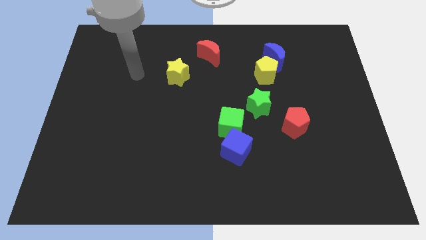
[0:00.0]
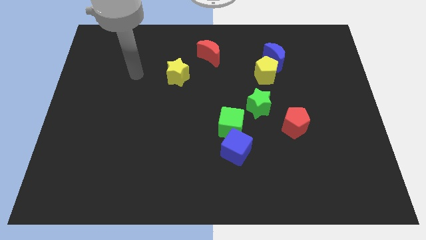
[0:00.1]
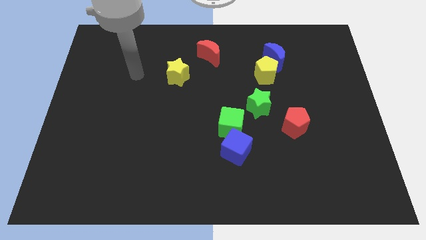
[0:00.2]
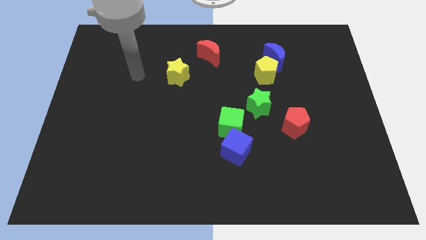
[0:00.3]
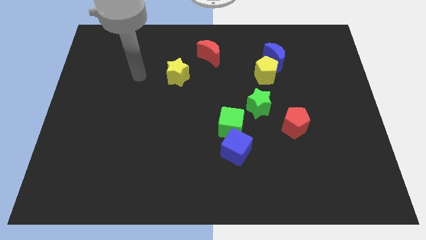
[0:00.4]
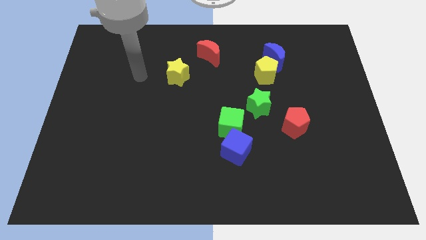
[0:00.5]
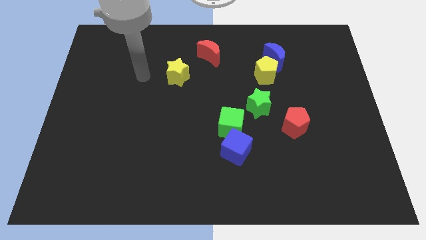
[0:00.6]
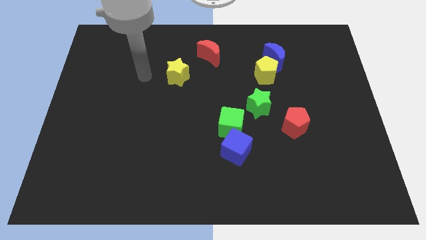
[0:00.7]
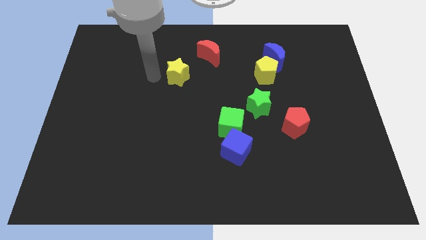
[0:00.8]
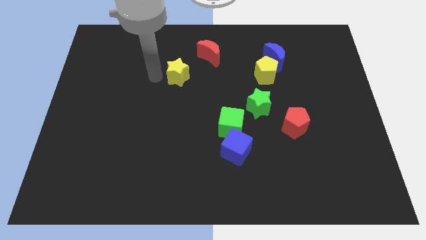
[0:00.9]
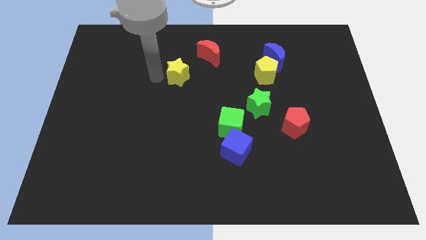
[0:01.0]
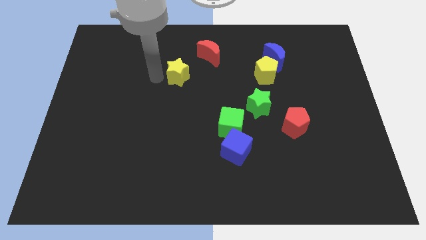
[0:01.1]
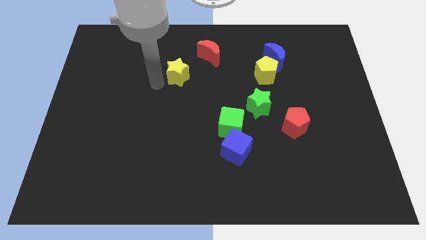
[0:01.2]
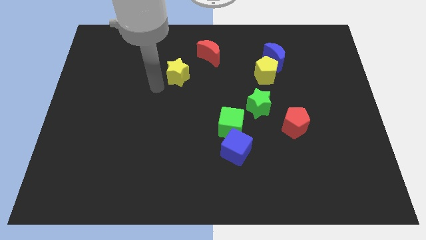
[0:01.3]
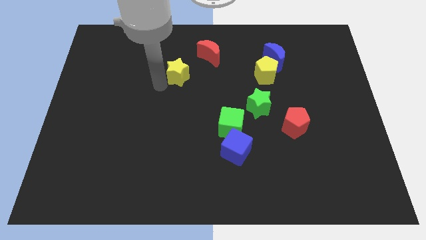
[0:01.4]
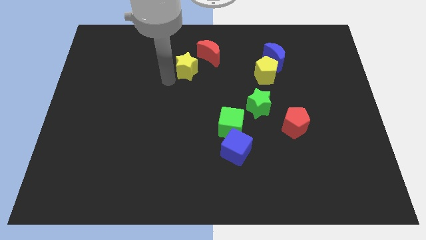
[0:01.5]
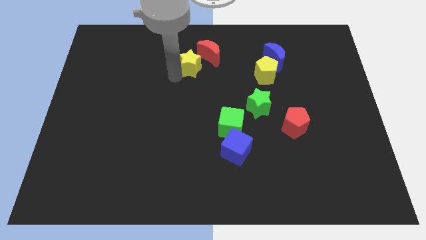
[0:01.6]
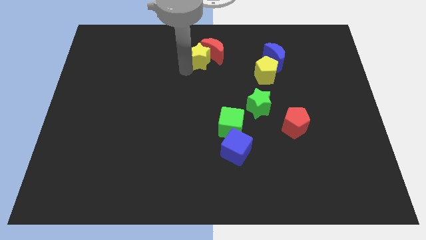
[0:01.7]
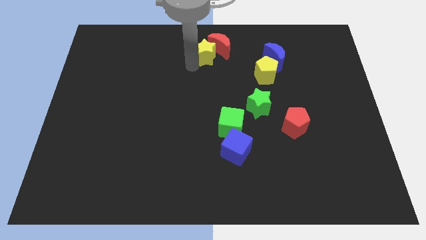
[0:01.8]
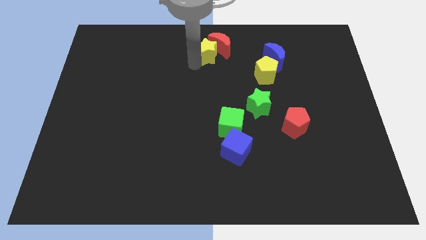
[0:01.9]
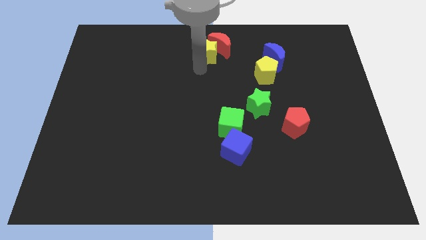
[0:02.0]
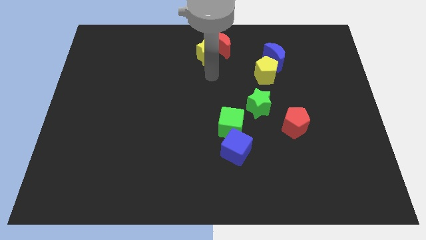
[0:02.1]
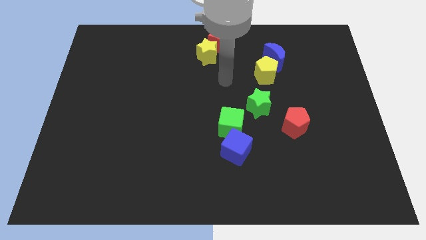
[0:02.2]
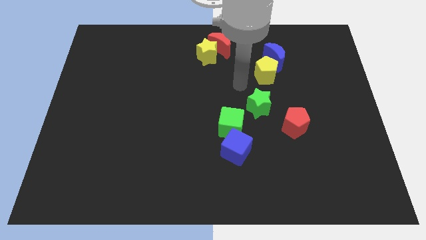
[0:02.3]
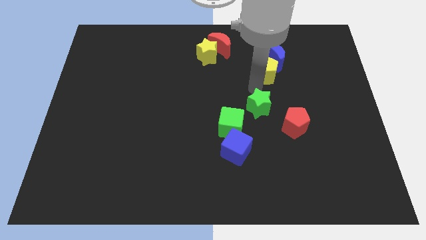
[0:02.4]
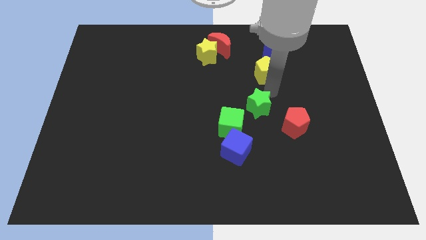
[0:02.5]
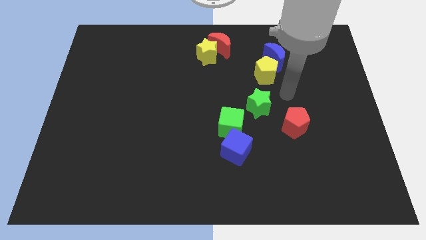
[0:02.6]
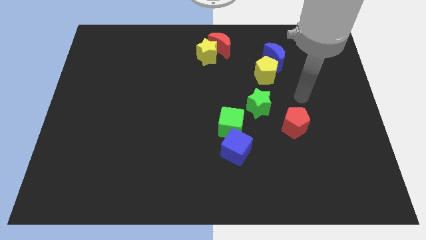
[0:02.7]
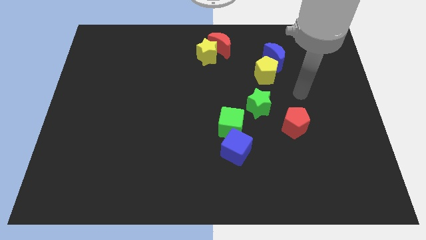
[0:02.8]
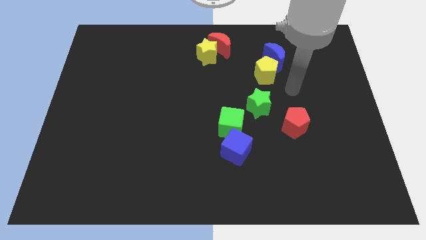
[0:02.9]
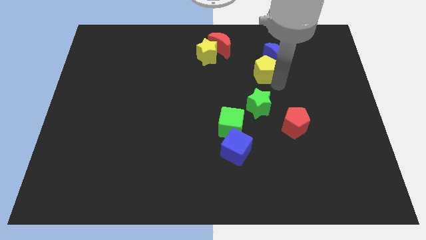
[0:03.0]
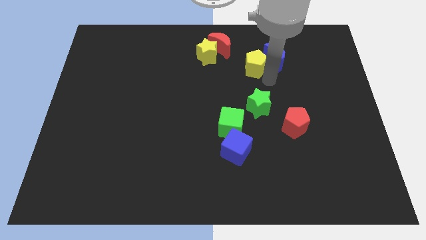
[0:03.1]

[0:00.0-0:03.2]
push the yellow star into the red moon

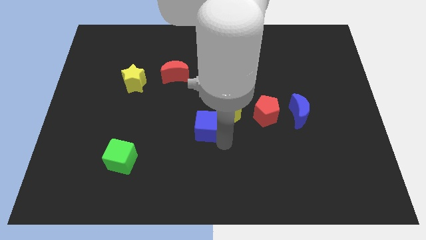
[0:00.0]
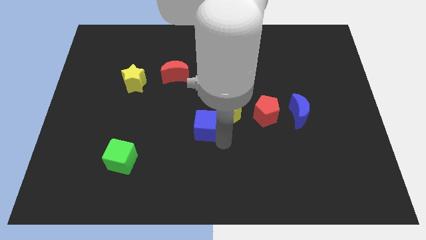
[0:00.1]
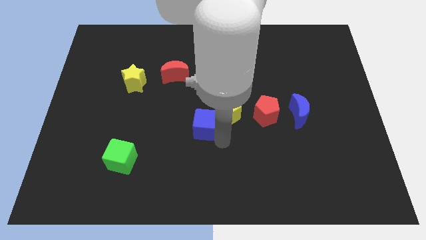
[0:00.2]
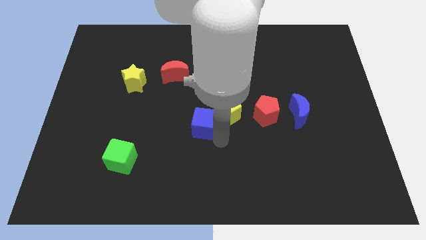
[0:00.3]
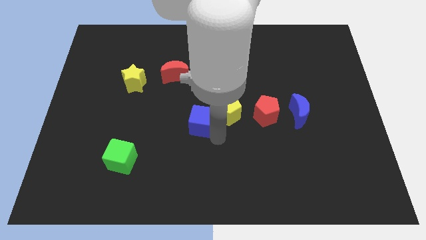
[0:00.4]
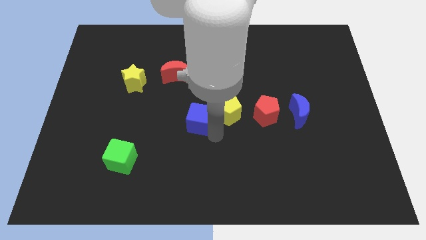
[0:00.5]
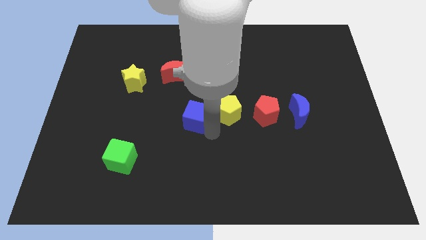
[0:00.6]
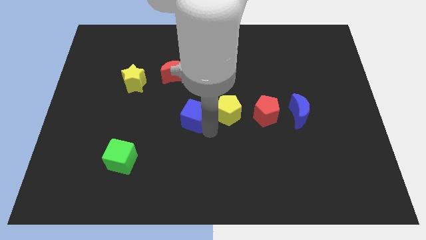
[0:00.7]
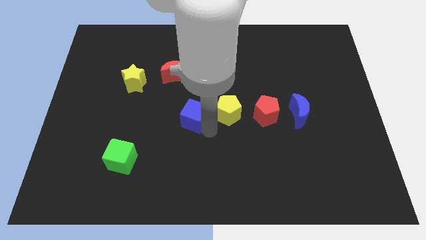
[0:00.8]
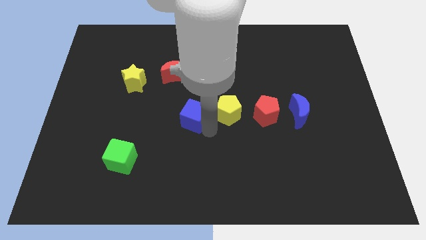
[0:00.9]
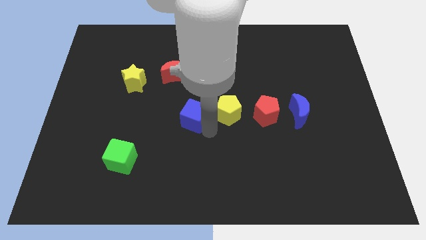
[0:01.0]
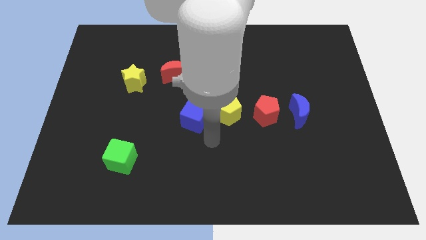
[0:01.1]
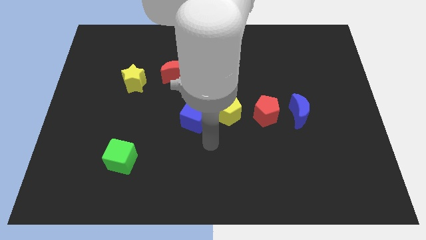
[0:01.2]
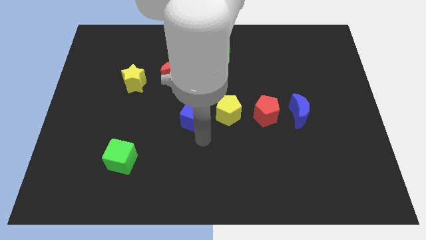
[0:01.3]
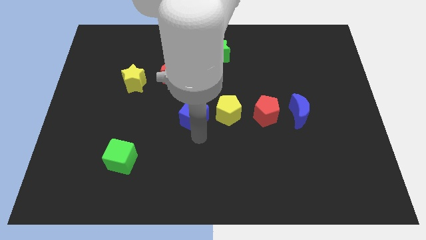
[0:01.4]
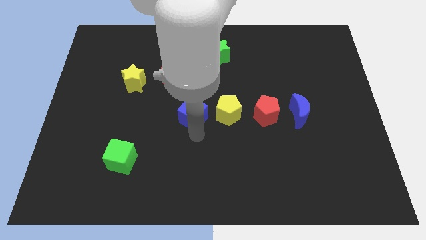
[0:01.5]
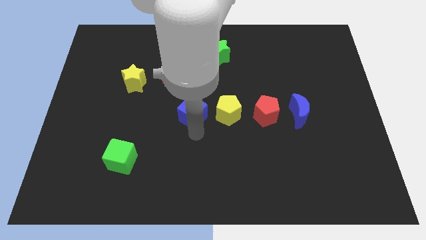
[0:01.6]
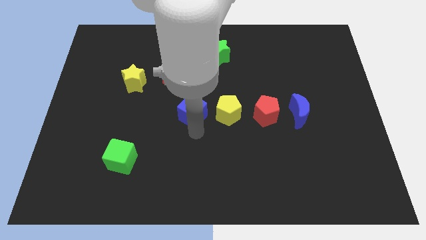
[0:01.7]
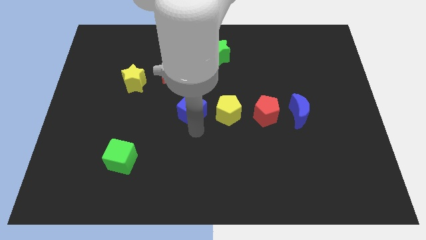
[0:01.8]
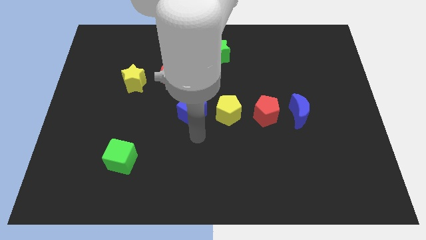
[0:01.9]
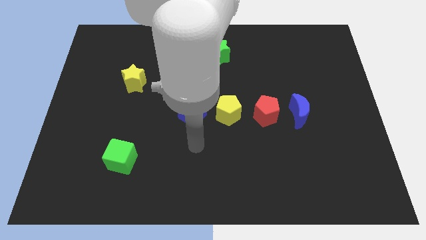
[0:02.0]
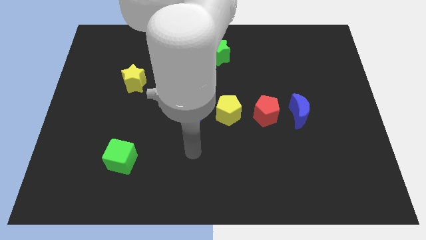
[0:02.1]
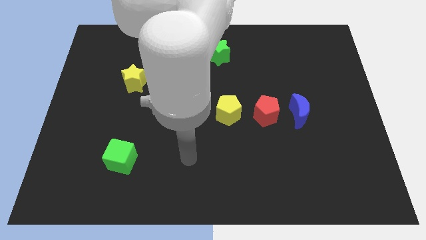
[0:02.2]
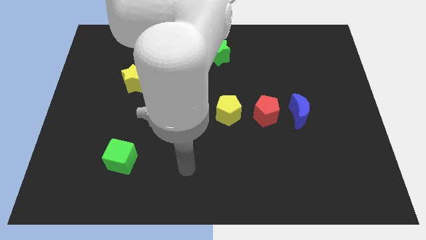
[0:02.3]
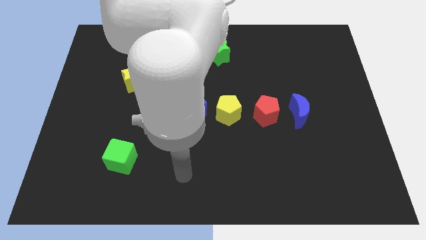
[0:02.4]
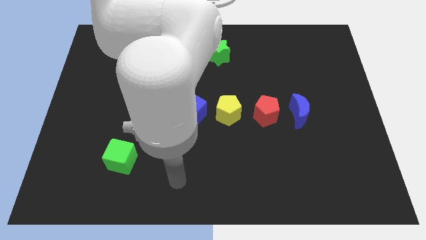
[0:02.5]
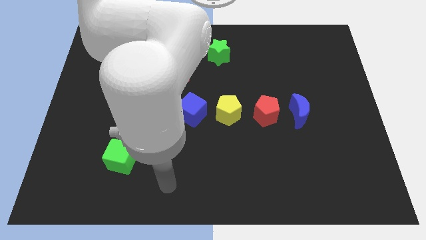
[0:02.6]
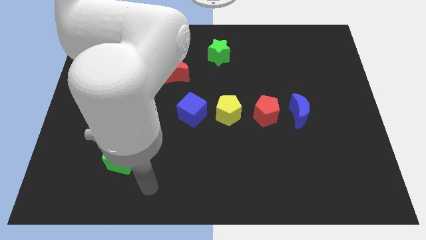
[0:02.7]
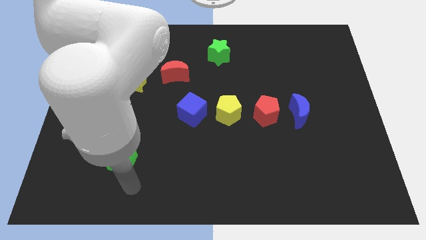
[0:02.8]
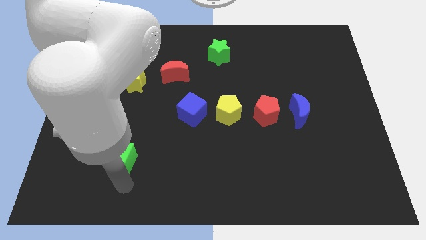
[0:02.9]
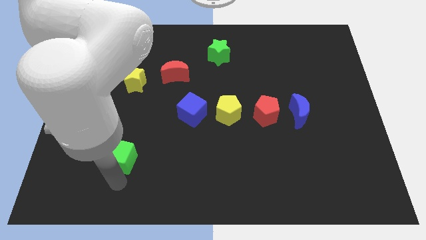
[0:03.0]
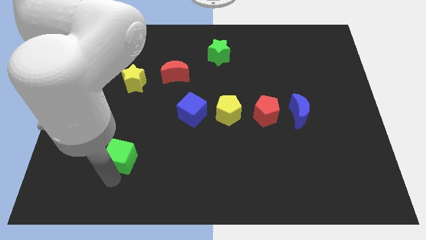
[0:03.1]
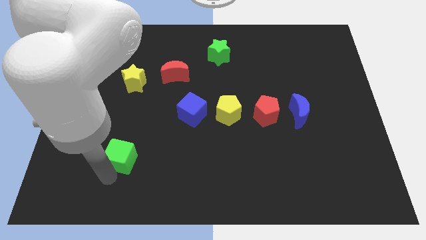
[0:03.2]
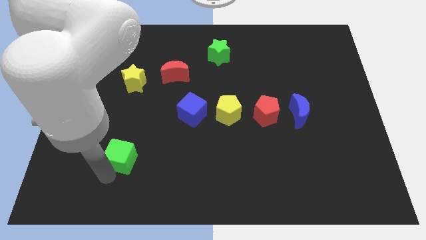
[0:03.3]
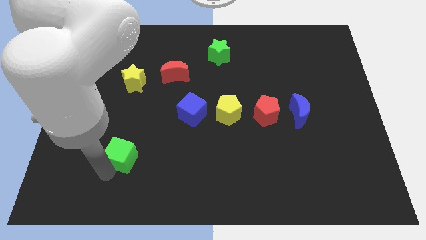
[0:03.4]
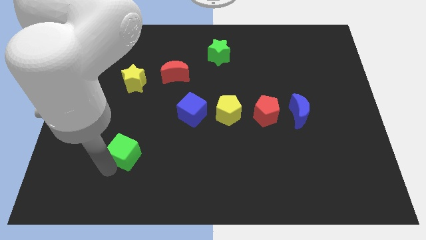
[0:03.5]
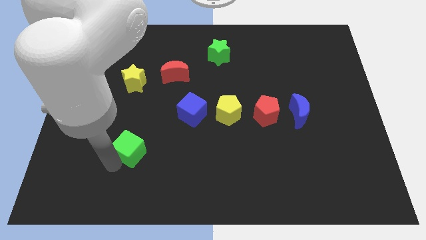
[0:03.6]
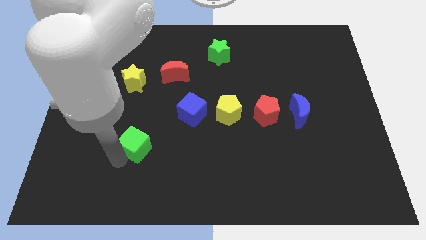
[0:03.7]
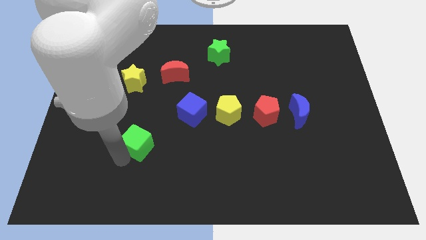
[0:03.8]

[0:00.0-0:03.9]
move blue cube to the center of the board

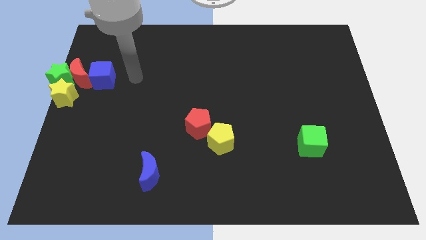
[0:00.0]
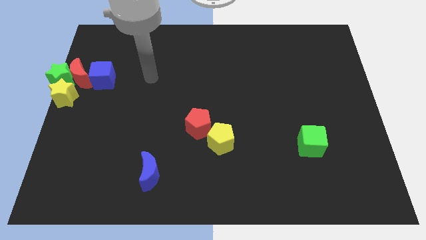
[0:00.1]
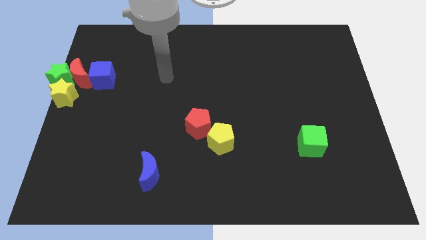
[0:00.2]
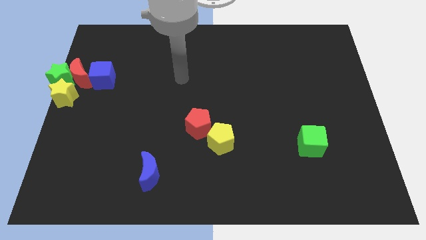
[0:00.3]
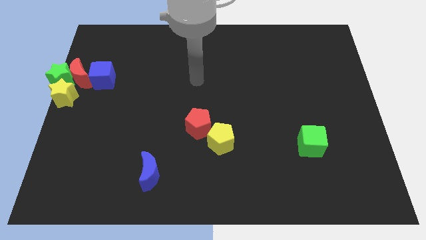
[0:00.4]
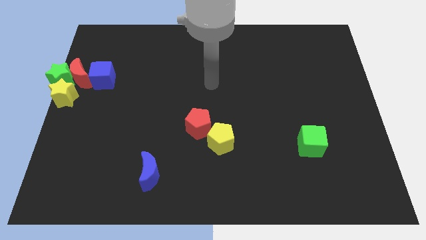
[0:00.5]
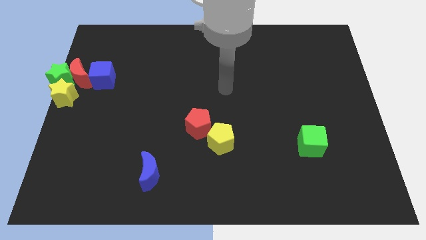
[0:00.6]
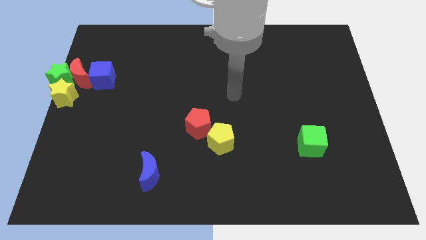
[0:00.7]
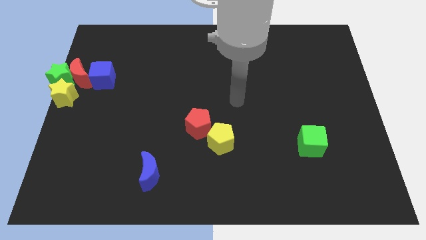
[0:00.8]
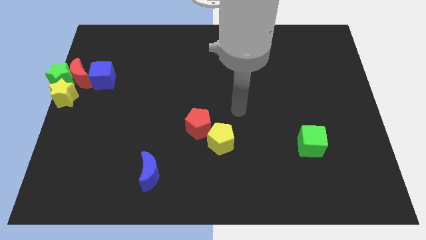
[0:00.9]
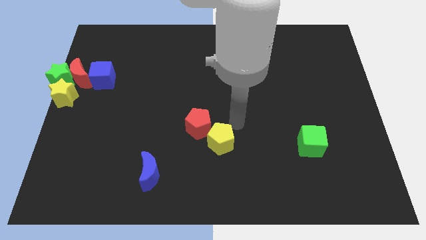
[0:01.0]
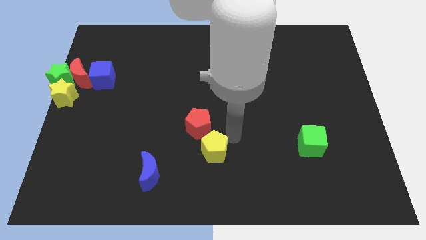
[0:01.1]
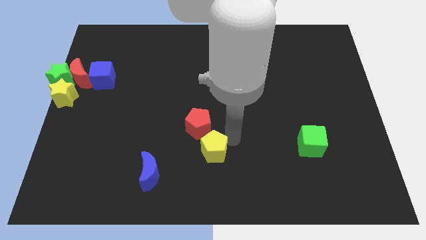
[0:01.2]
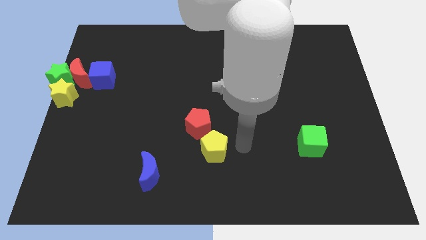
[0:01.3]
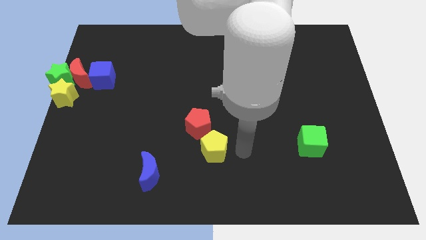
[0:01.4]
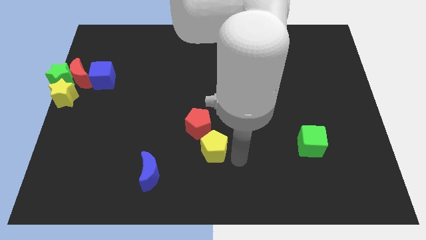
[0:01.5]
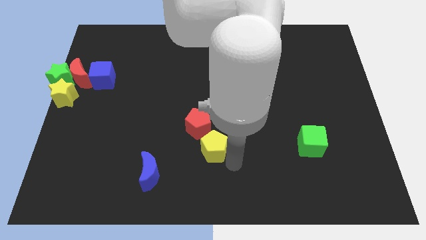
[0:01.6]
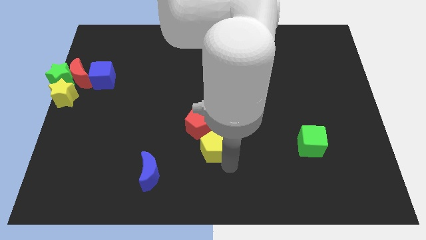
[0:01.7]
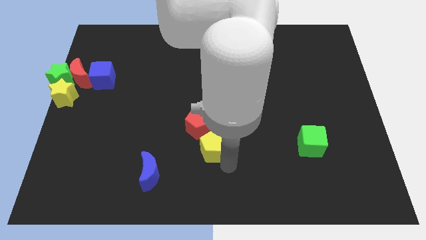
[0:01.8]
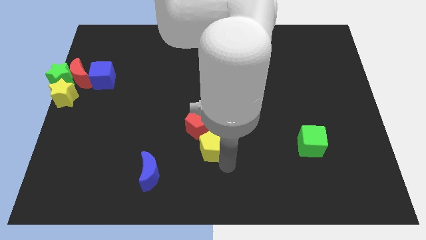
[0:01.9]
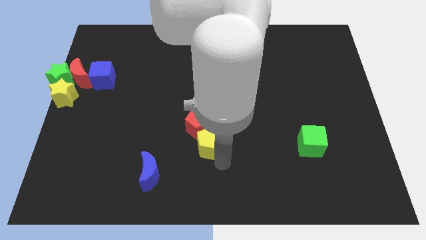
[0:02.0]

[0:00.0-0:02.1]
place the yellow pentagon parallel to the left of green cube
